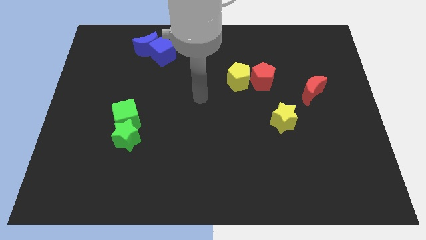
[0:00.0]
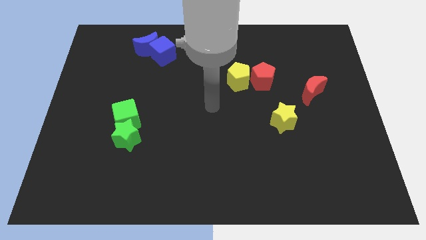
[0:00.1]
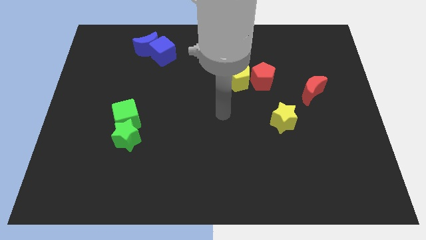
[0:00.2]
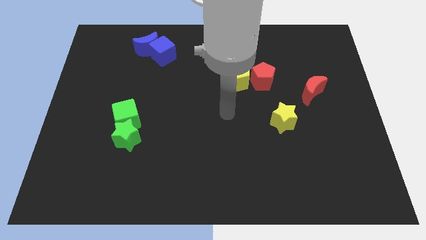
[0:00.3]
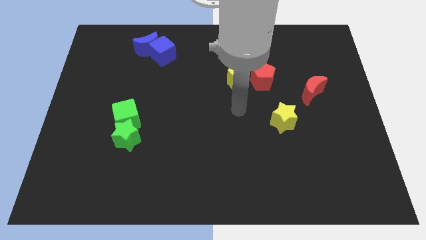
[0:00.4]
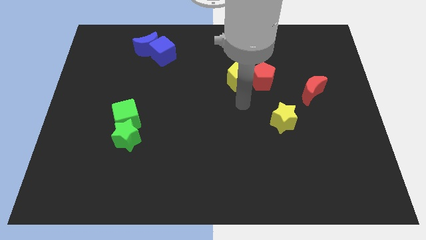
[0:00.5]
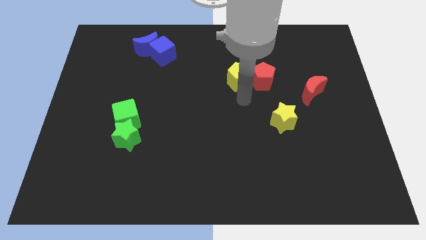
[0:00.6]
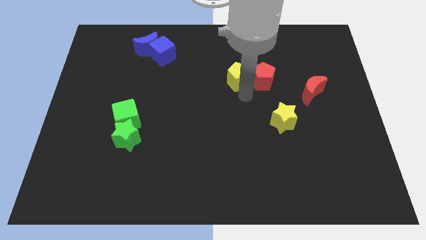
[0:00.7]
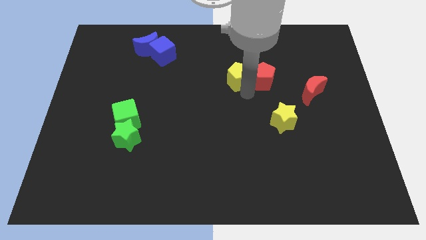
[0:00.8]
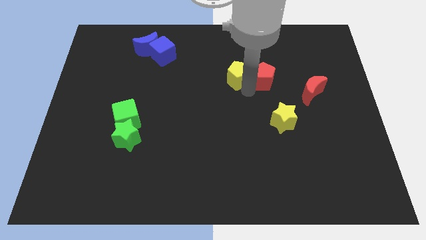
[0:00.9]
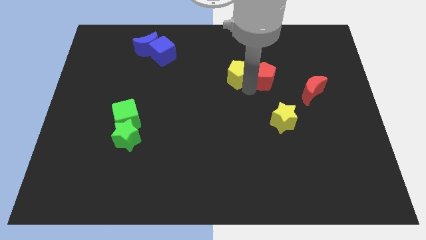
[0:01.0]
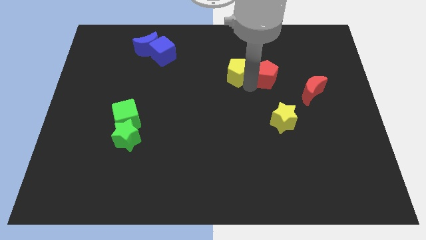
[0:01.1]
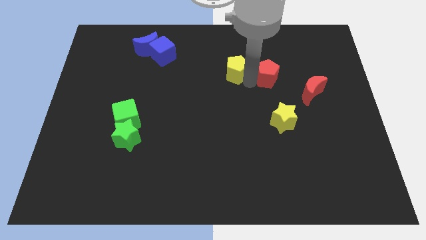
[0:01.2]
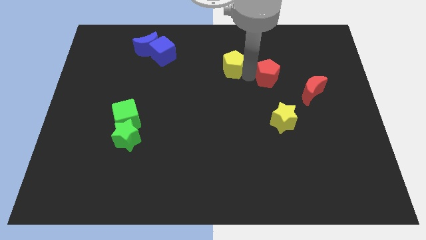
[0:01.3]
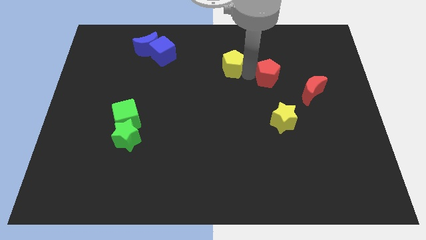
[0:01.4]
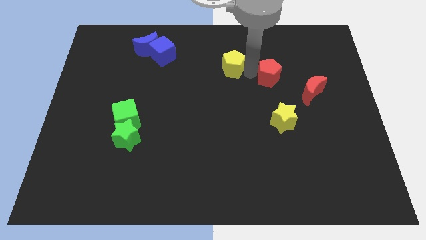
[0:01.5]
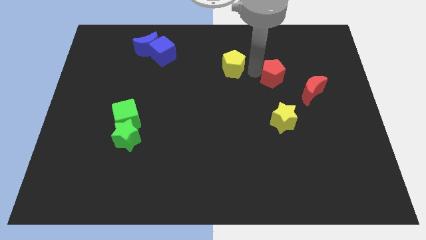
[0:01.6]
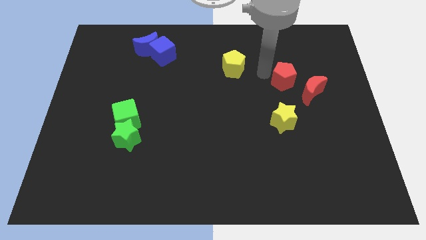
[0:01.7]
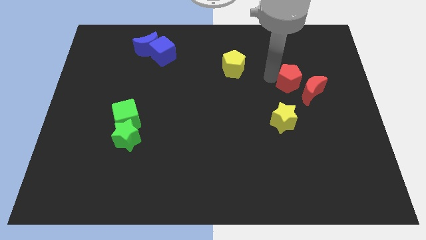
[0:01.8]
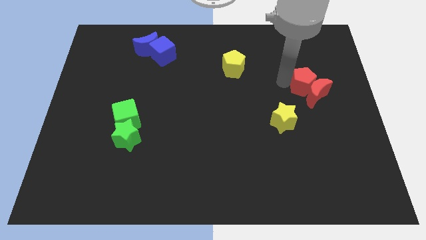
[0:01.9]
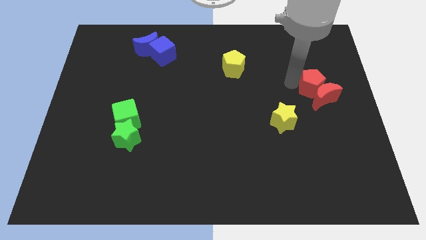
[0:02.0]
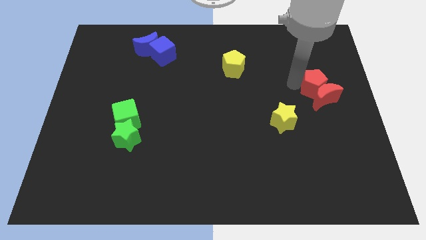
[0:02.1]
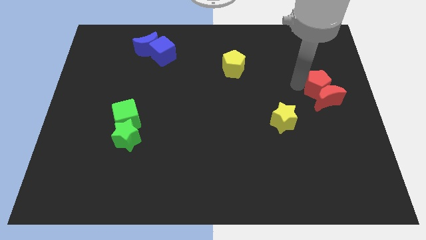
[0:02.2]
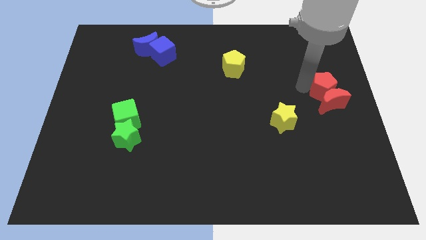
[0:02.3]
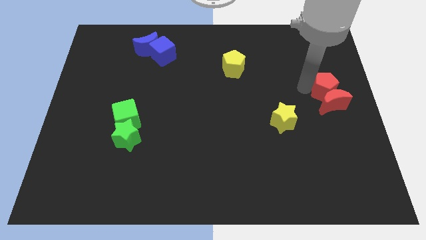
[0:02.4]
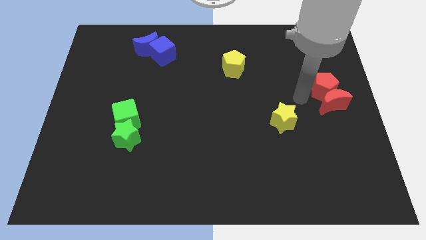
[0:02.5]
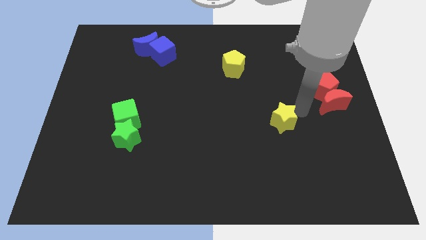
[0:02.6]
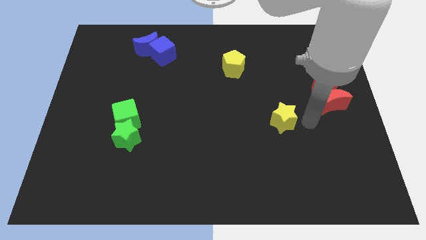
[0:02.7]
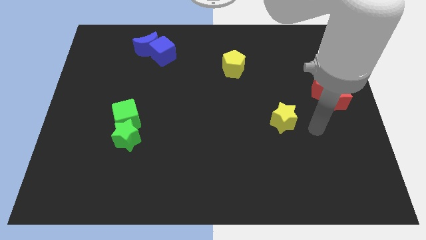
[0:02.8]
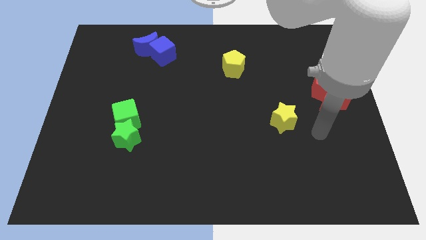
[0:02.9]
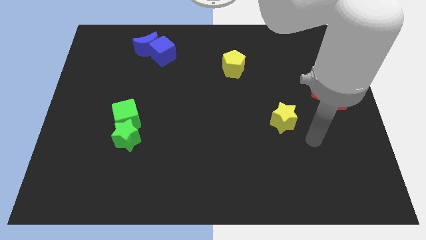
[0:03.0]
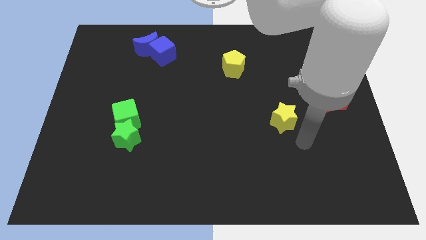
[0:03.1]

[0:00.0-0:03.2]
move the red blocks to the center right

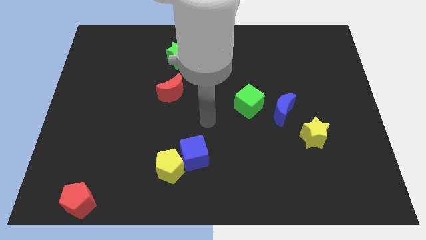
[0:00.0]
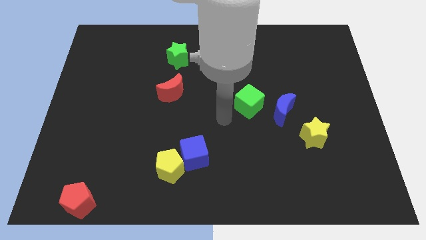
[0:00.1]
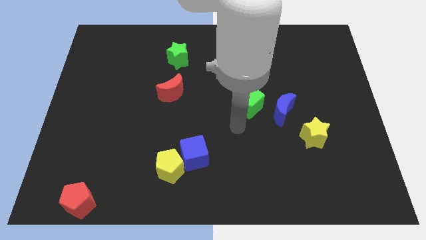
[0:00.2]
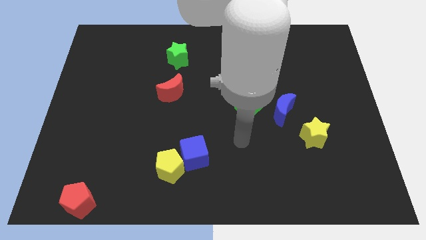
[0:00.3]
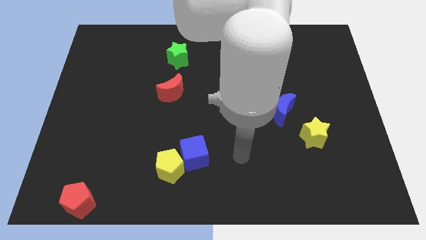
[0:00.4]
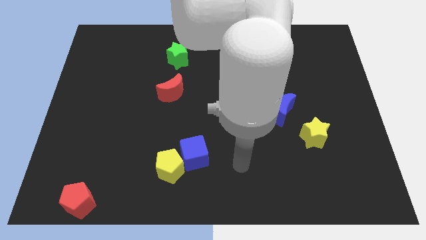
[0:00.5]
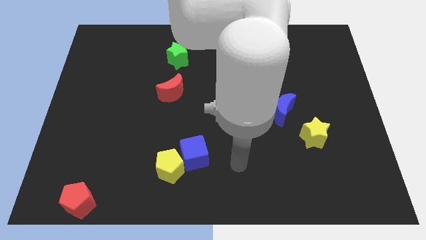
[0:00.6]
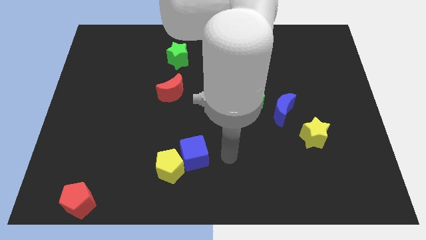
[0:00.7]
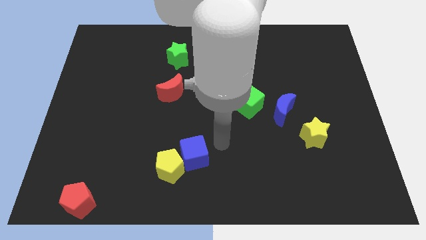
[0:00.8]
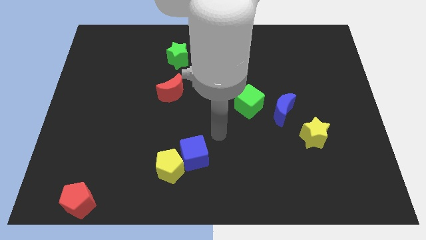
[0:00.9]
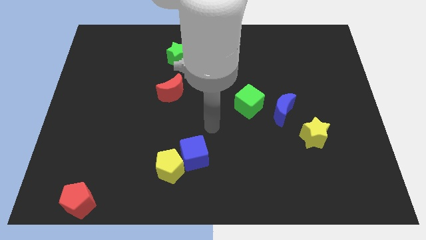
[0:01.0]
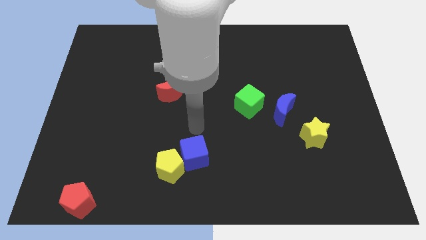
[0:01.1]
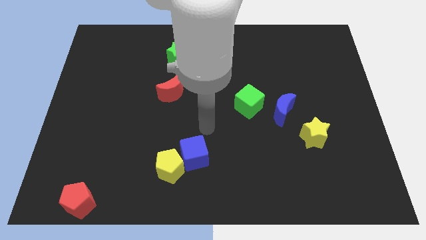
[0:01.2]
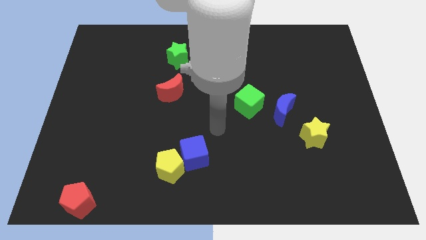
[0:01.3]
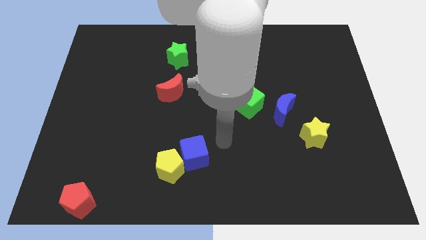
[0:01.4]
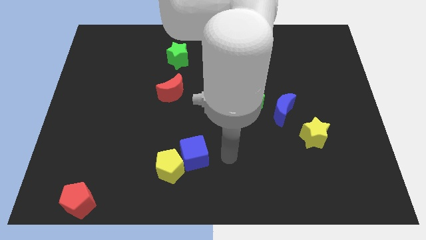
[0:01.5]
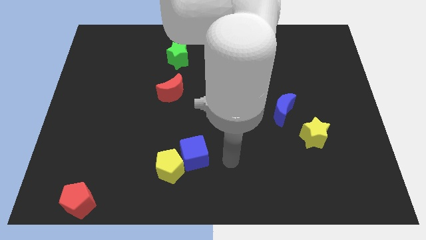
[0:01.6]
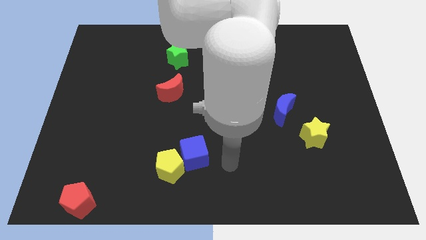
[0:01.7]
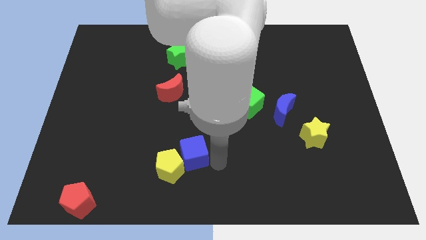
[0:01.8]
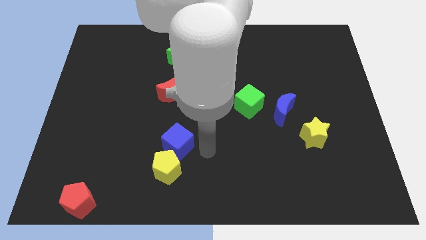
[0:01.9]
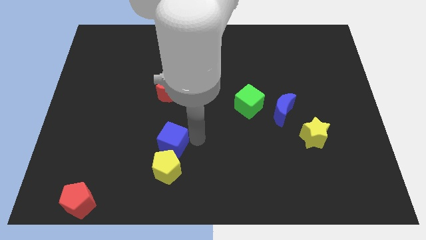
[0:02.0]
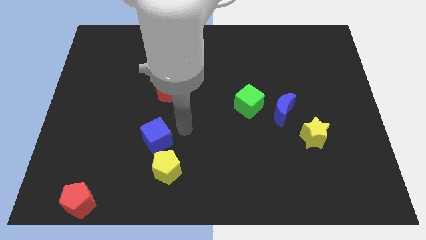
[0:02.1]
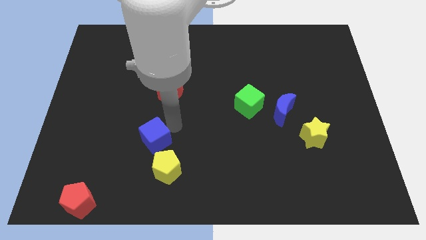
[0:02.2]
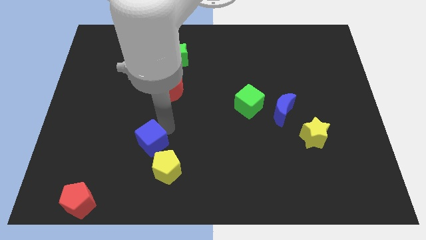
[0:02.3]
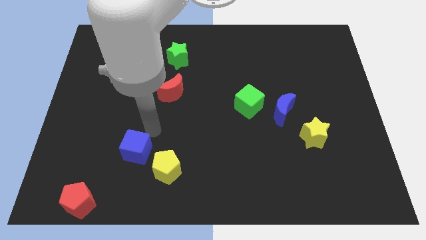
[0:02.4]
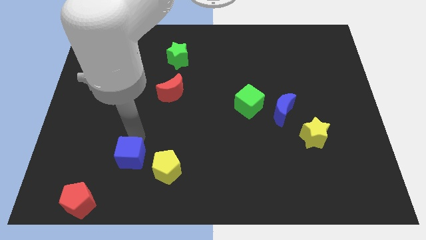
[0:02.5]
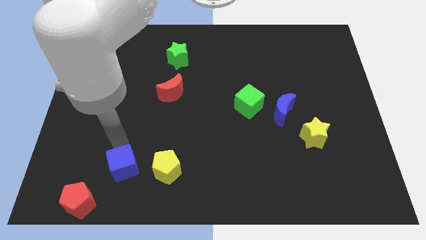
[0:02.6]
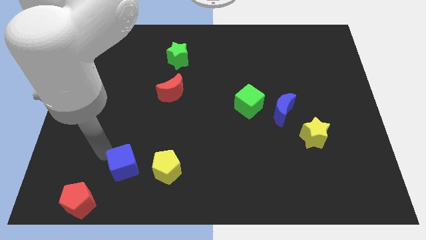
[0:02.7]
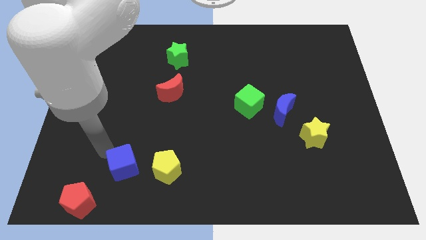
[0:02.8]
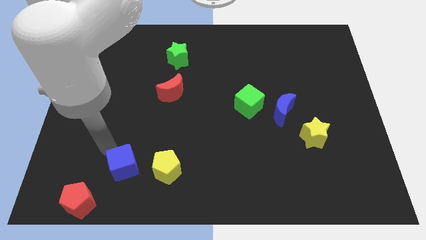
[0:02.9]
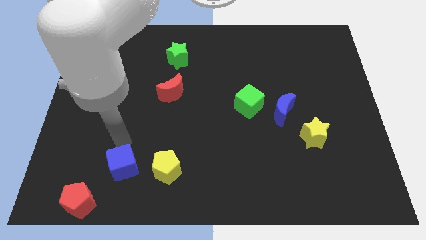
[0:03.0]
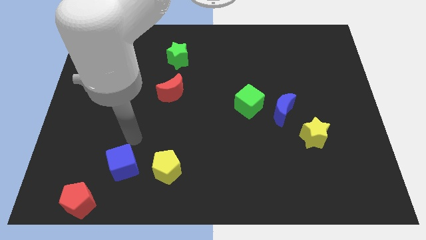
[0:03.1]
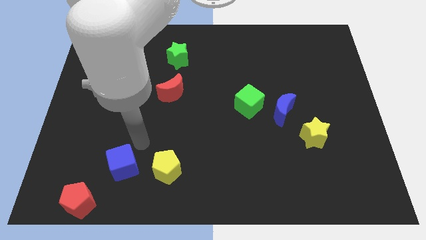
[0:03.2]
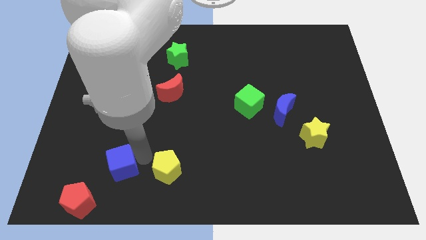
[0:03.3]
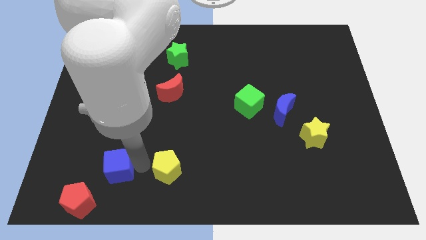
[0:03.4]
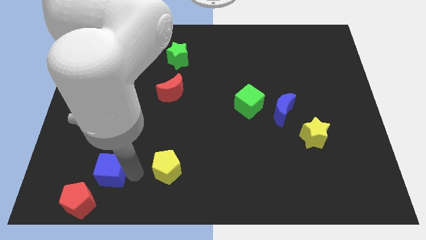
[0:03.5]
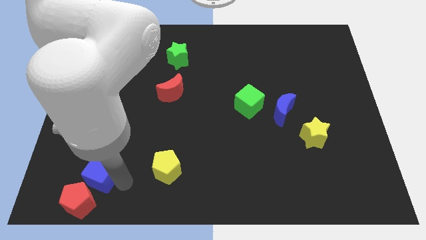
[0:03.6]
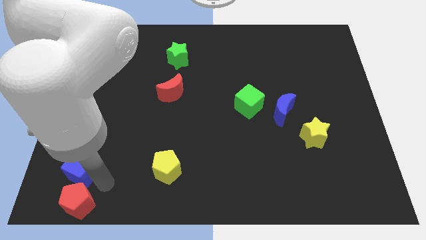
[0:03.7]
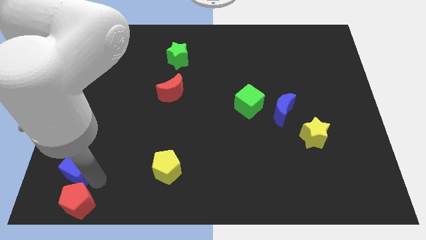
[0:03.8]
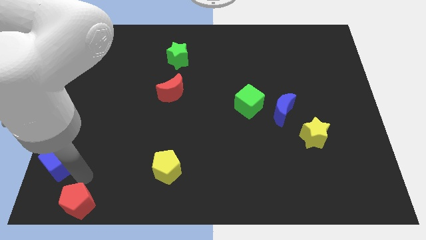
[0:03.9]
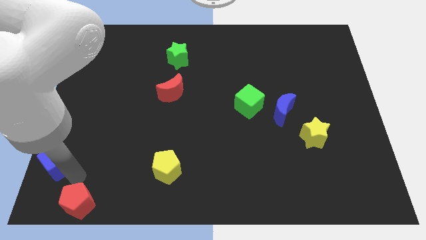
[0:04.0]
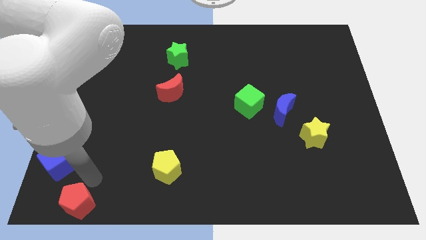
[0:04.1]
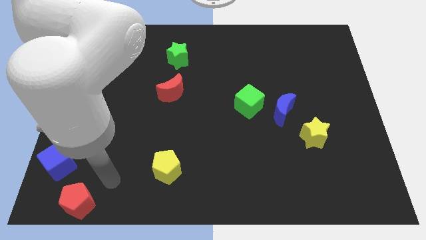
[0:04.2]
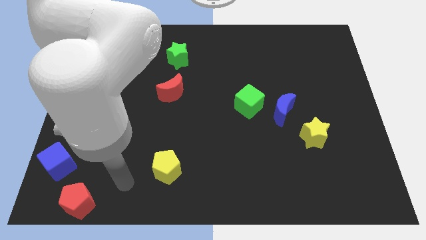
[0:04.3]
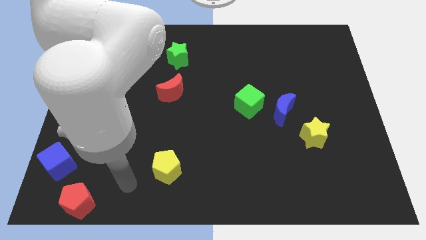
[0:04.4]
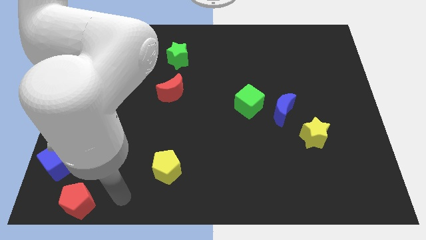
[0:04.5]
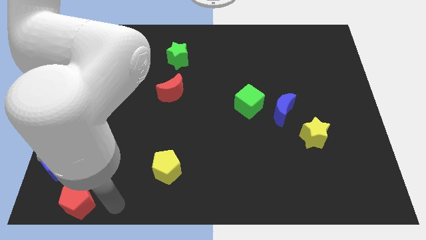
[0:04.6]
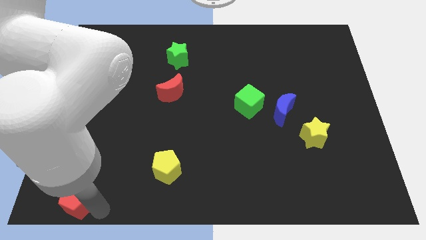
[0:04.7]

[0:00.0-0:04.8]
push the blue cube parallel left to the yellow pentagon

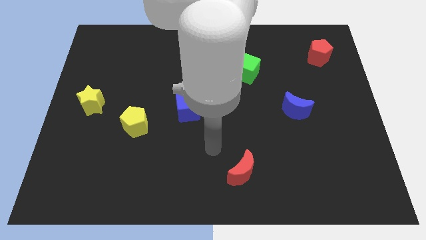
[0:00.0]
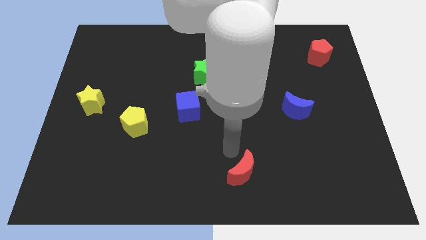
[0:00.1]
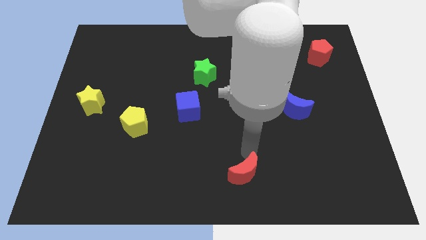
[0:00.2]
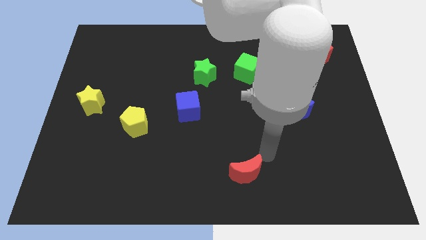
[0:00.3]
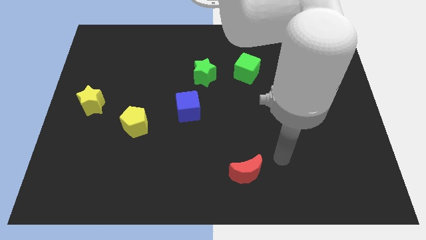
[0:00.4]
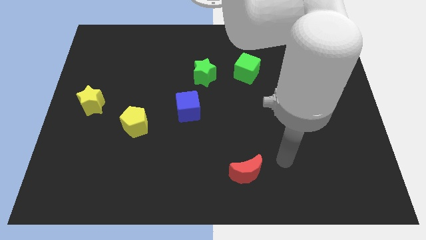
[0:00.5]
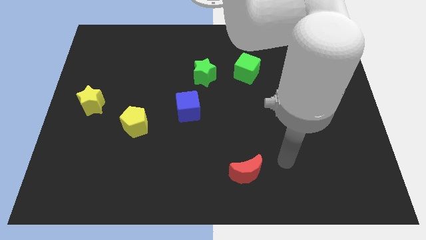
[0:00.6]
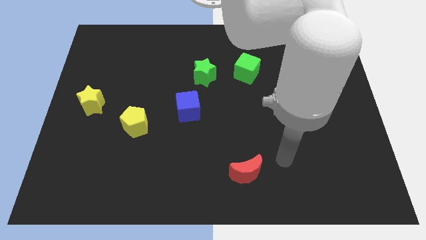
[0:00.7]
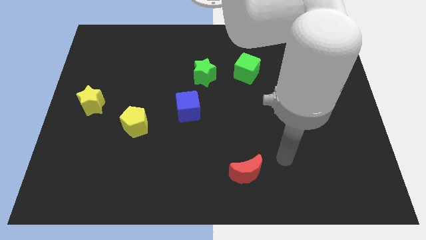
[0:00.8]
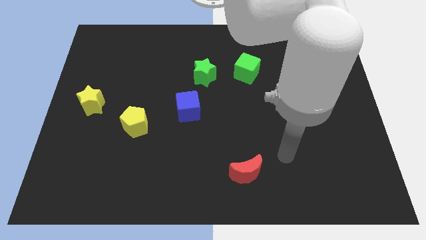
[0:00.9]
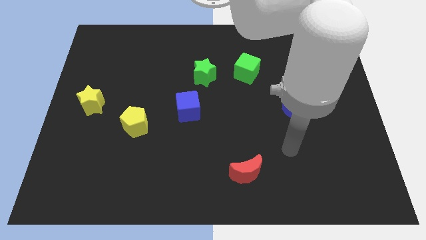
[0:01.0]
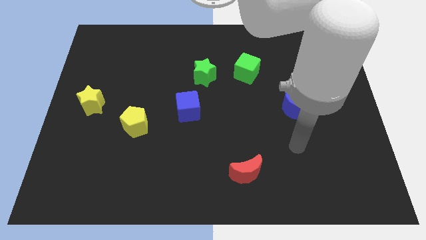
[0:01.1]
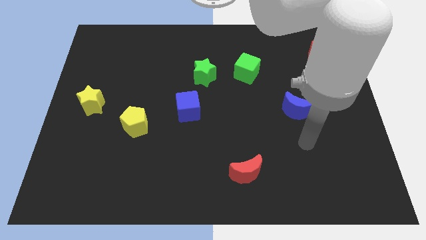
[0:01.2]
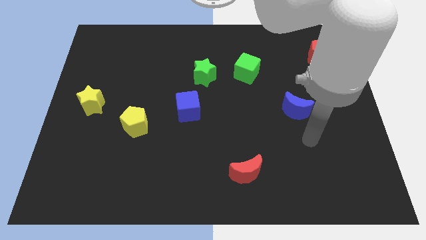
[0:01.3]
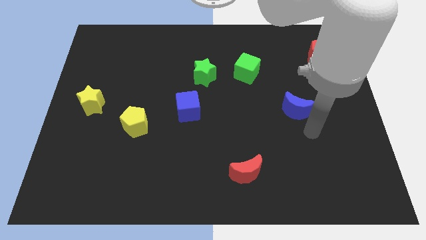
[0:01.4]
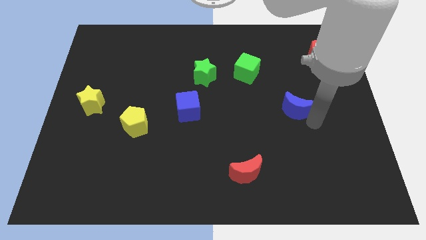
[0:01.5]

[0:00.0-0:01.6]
move the red moon slightly
